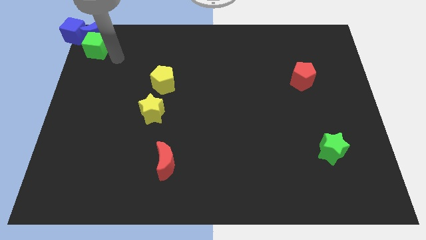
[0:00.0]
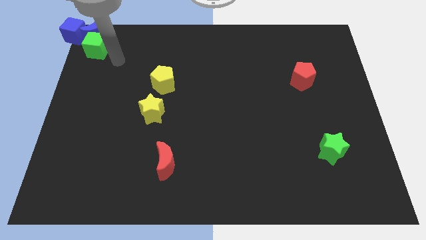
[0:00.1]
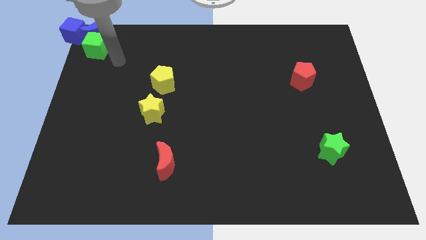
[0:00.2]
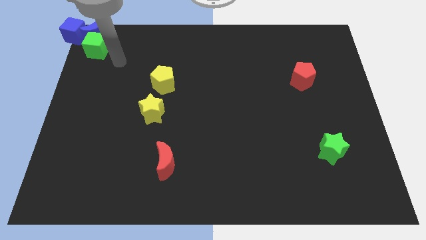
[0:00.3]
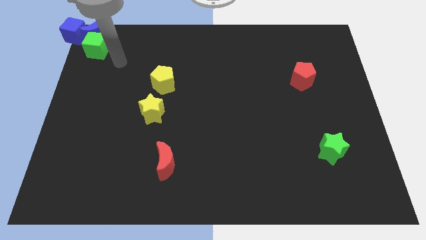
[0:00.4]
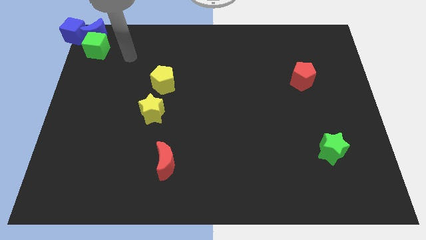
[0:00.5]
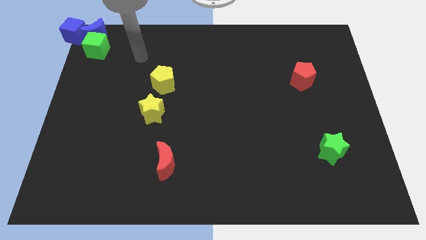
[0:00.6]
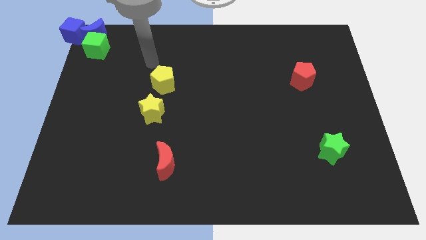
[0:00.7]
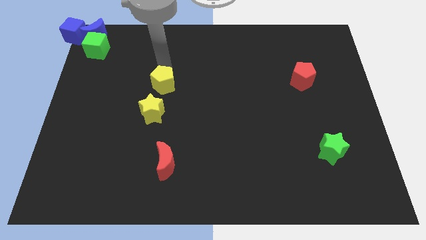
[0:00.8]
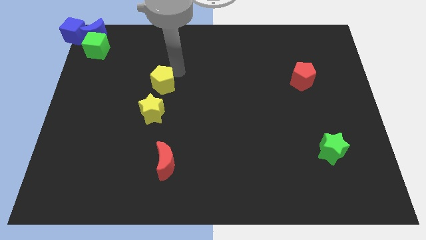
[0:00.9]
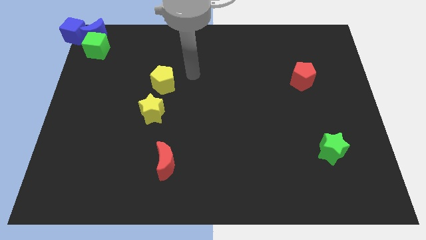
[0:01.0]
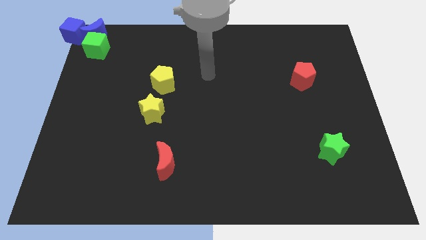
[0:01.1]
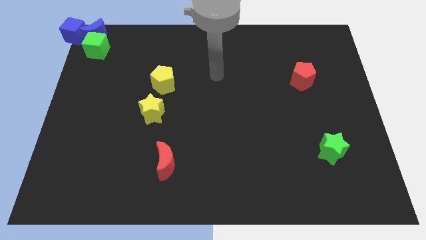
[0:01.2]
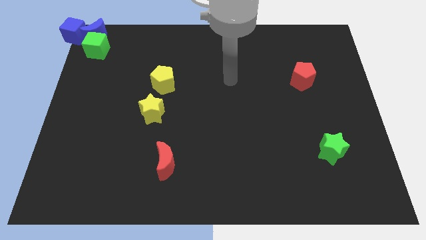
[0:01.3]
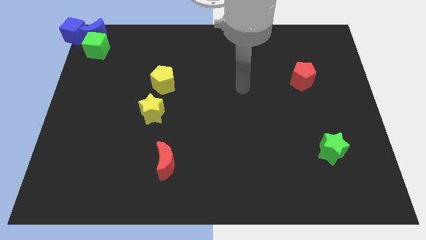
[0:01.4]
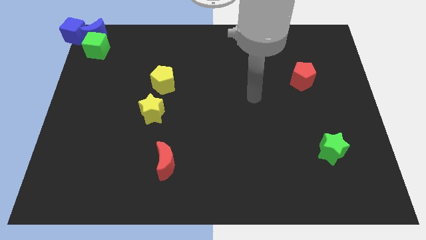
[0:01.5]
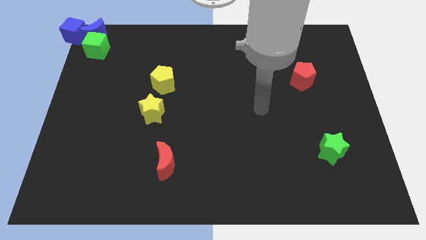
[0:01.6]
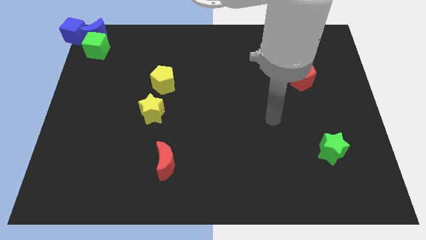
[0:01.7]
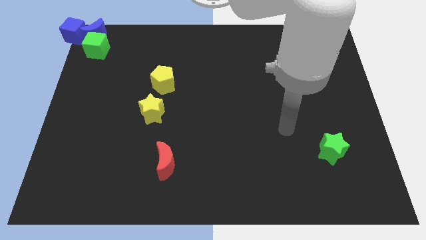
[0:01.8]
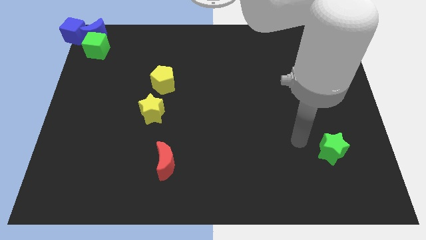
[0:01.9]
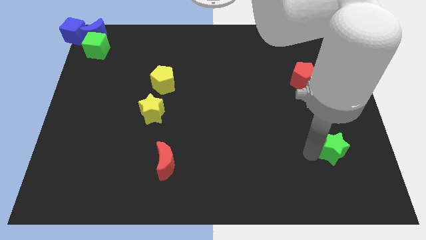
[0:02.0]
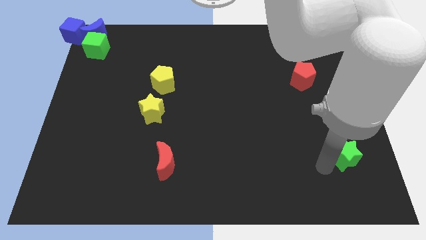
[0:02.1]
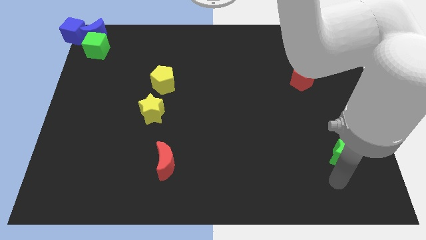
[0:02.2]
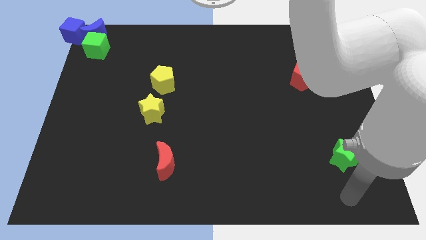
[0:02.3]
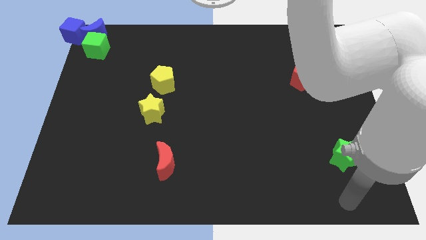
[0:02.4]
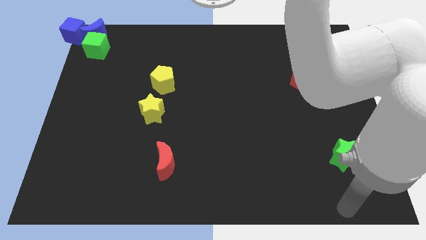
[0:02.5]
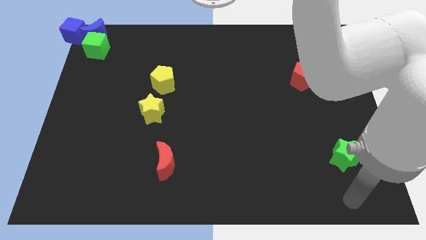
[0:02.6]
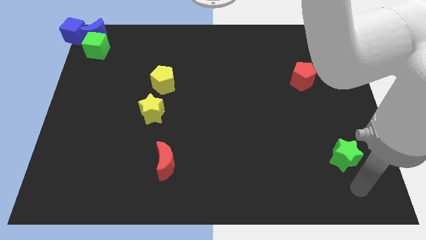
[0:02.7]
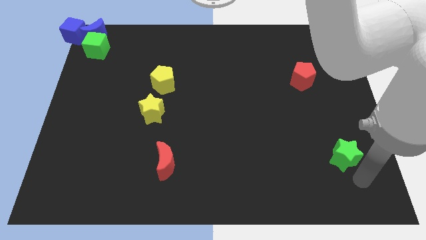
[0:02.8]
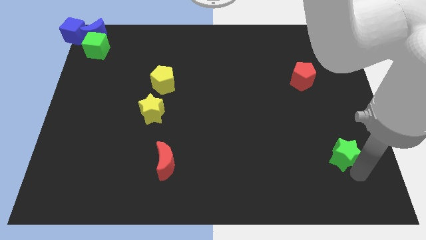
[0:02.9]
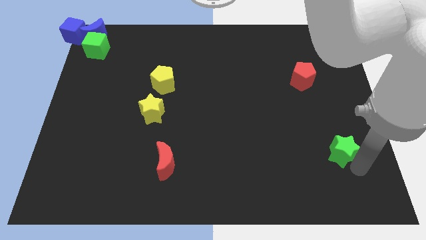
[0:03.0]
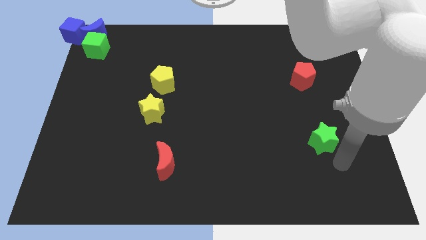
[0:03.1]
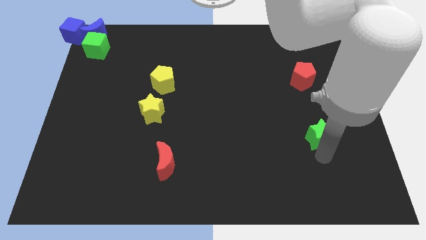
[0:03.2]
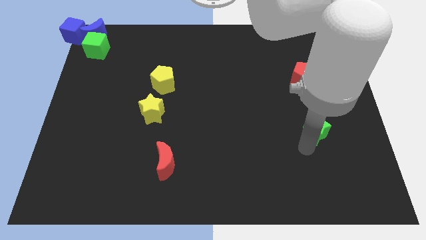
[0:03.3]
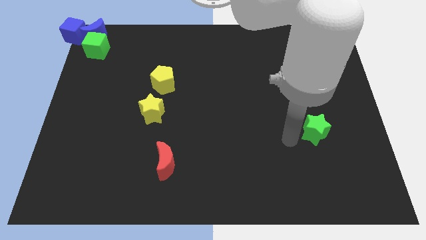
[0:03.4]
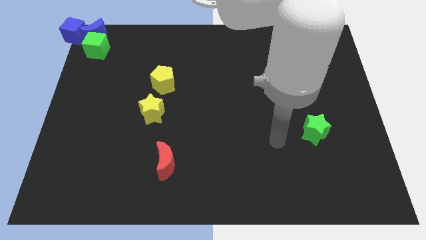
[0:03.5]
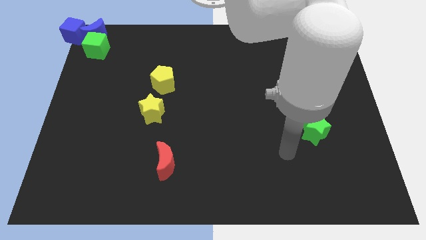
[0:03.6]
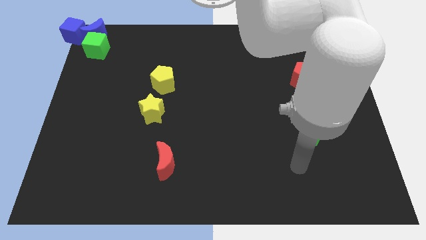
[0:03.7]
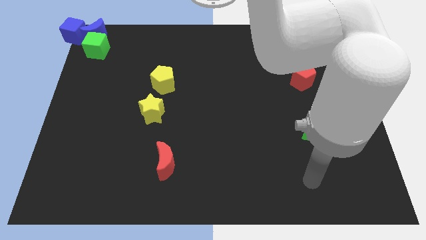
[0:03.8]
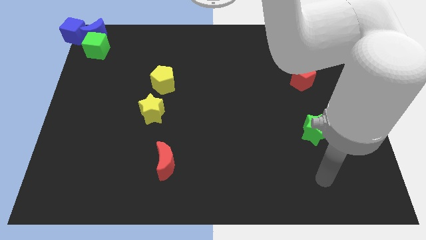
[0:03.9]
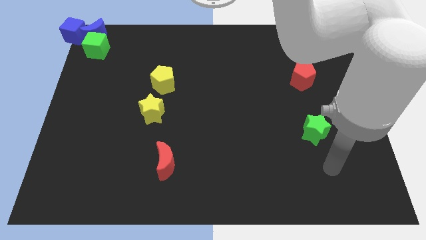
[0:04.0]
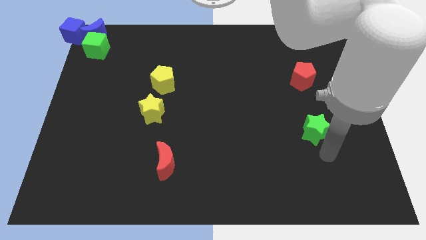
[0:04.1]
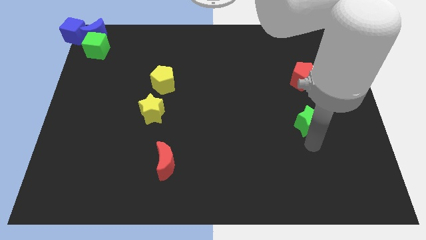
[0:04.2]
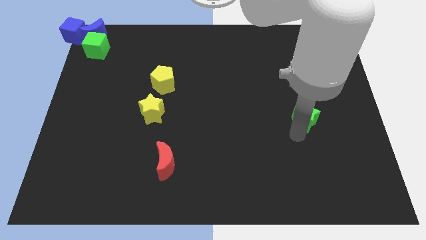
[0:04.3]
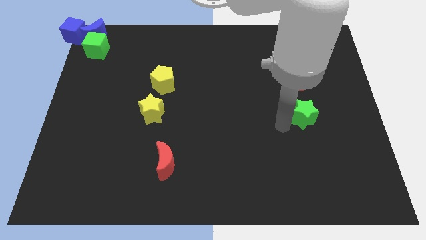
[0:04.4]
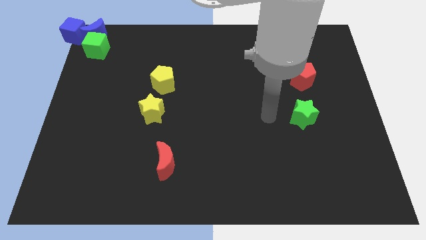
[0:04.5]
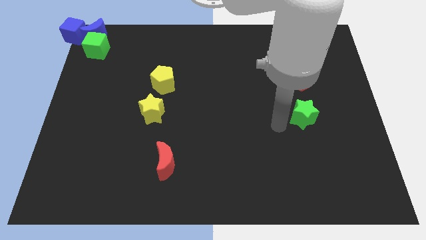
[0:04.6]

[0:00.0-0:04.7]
put the green star horizontally to the right of the yellow star

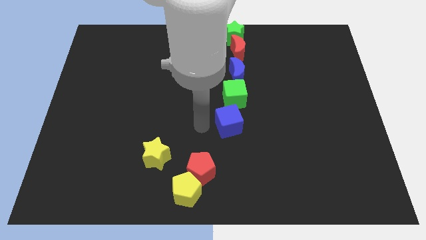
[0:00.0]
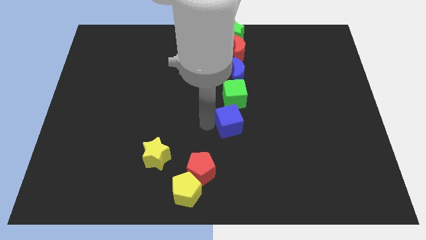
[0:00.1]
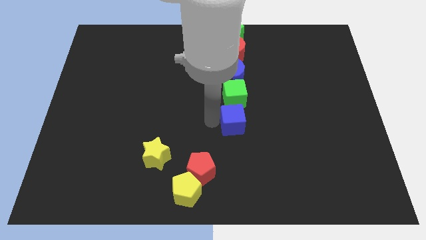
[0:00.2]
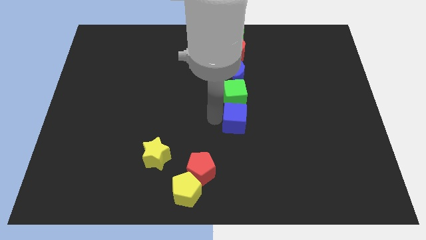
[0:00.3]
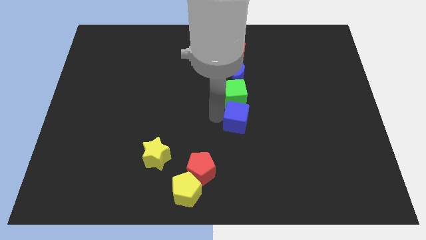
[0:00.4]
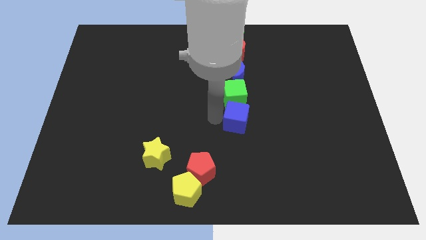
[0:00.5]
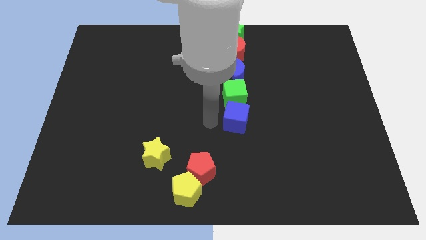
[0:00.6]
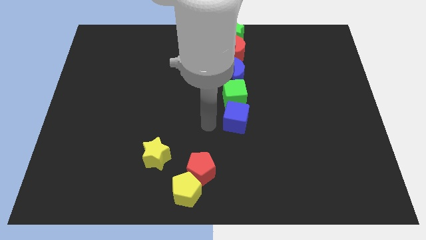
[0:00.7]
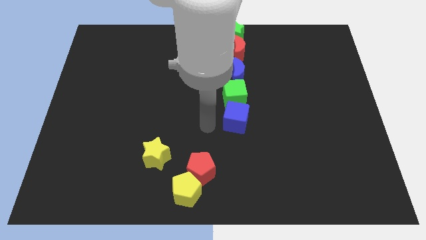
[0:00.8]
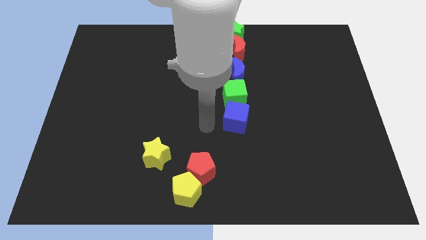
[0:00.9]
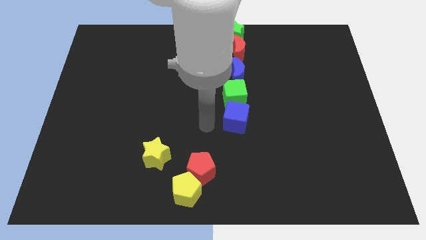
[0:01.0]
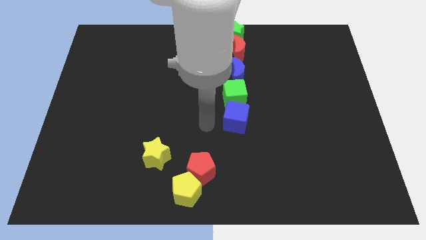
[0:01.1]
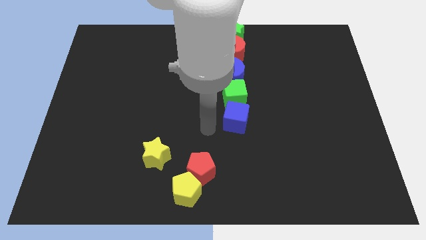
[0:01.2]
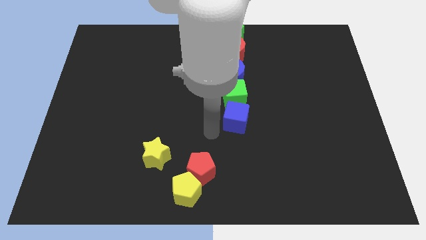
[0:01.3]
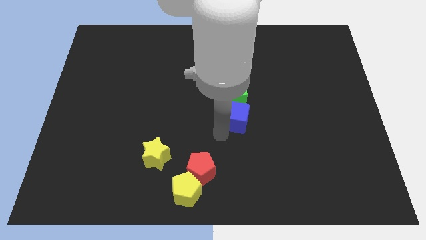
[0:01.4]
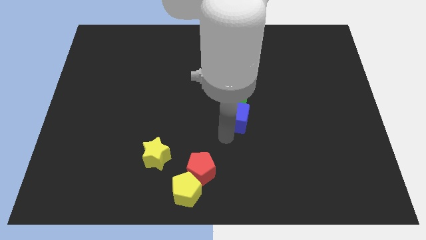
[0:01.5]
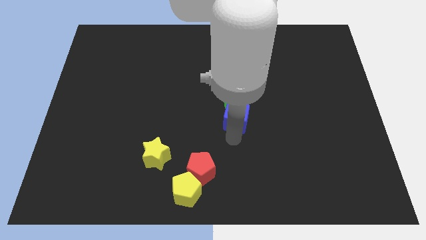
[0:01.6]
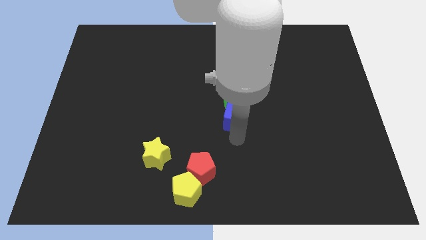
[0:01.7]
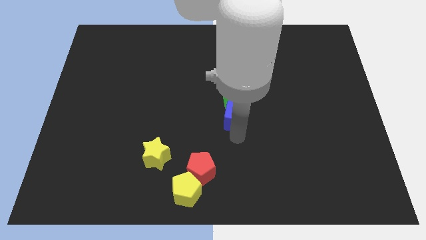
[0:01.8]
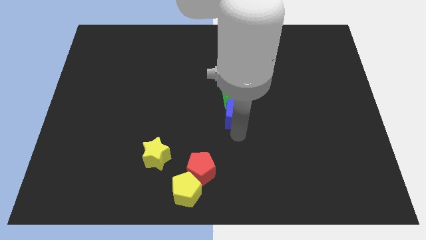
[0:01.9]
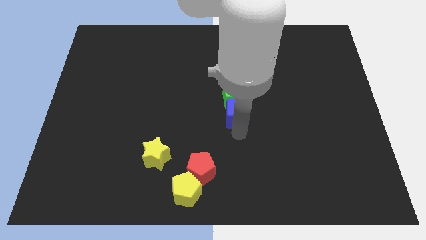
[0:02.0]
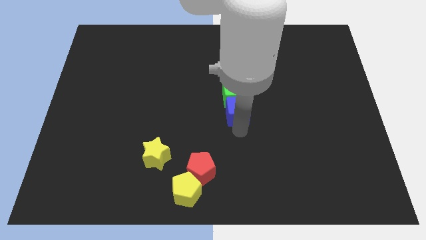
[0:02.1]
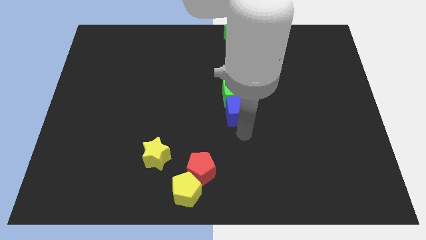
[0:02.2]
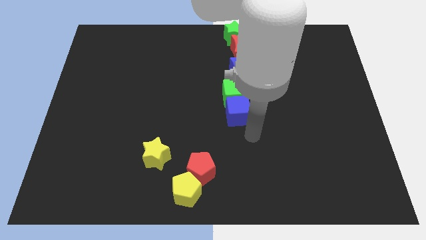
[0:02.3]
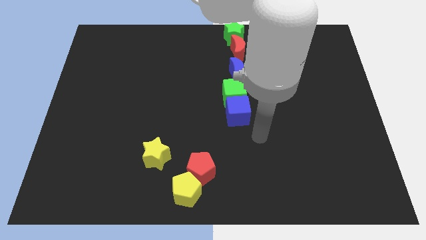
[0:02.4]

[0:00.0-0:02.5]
place the blue cube below green cube

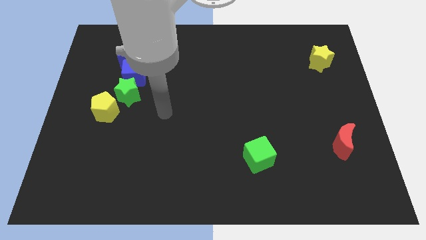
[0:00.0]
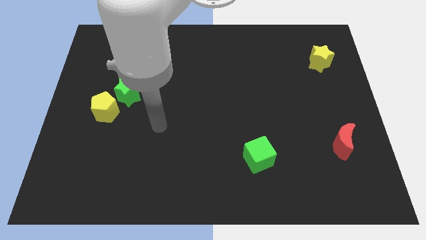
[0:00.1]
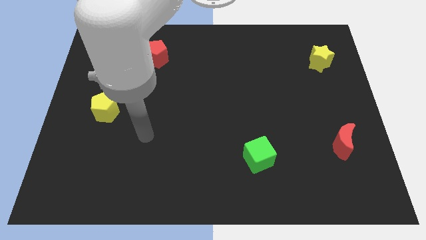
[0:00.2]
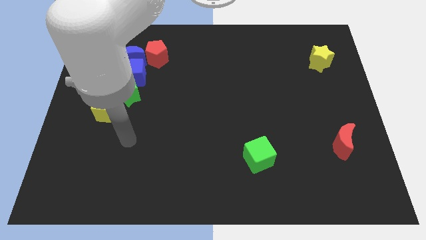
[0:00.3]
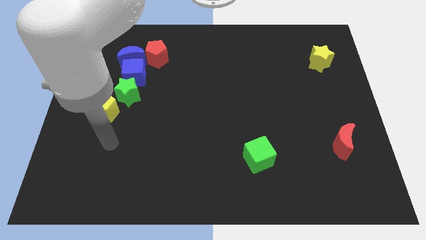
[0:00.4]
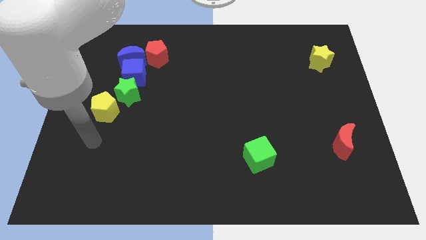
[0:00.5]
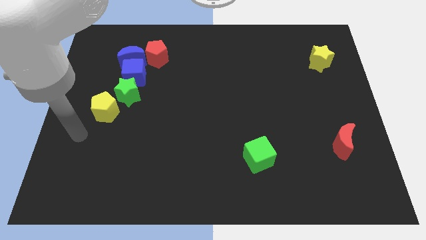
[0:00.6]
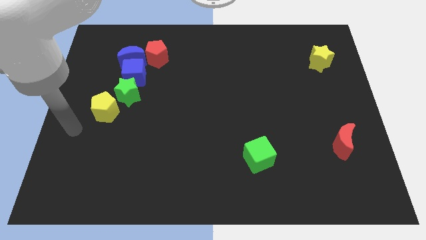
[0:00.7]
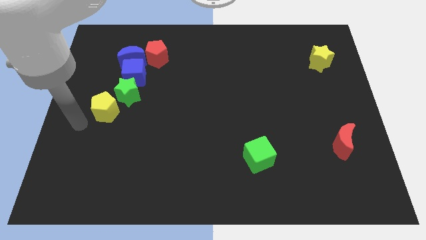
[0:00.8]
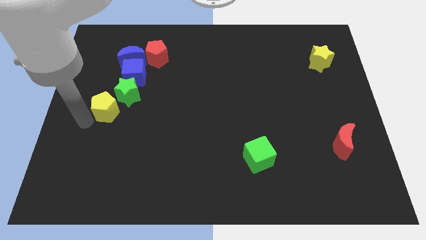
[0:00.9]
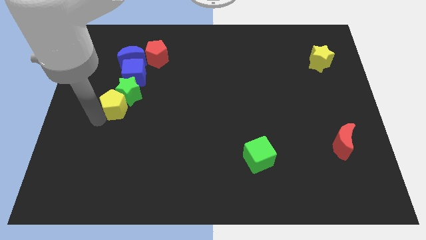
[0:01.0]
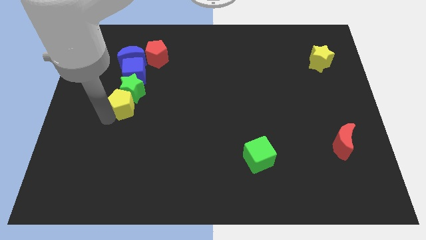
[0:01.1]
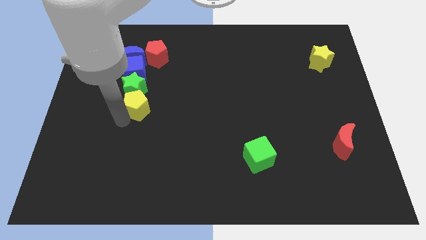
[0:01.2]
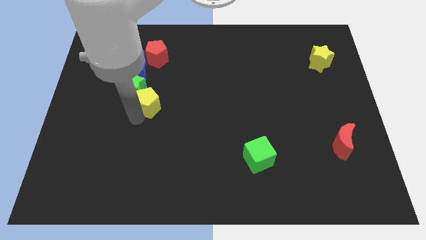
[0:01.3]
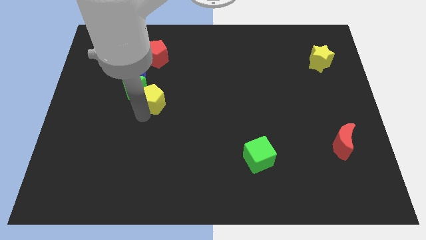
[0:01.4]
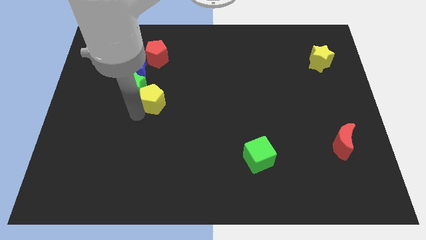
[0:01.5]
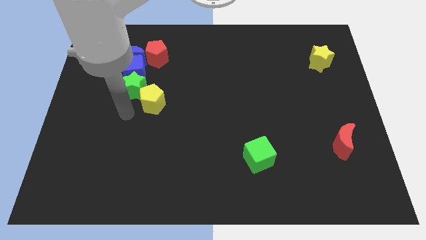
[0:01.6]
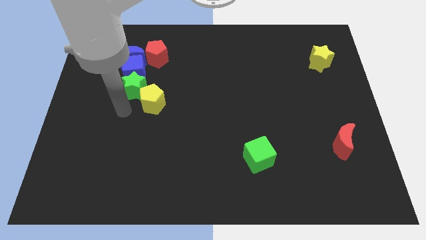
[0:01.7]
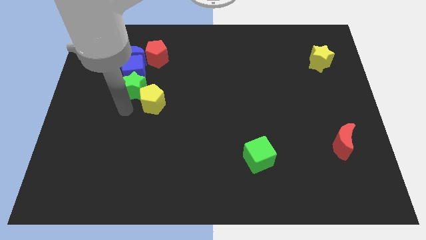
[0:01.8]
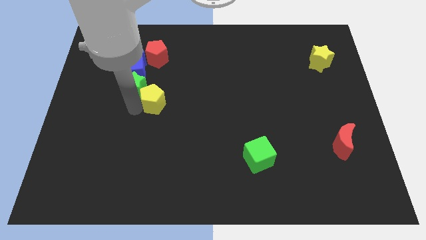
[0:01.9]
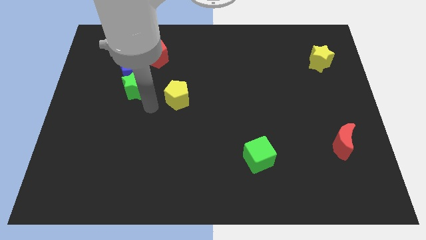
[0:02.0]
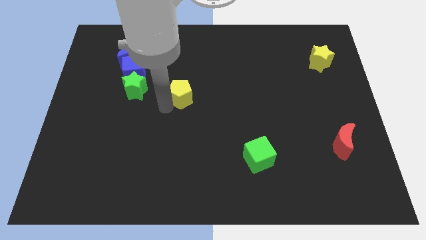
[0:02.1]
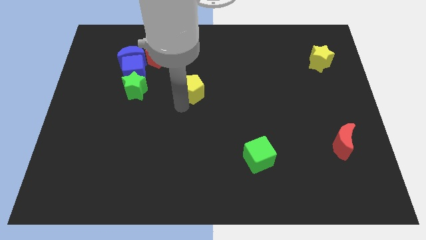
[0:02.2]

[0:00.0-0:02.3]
move the yellow pentagon towards the center of the board
